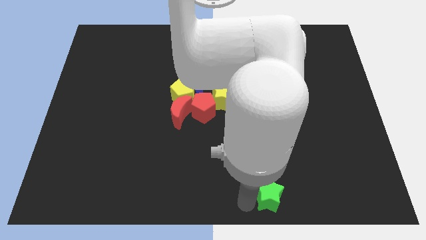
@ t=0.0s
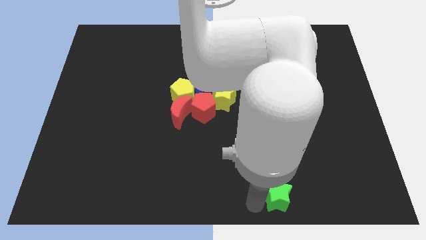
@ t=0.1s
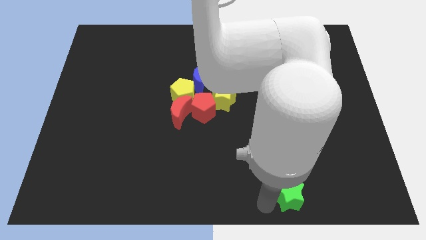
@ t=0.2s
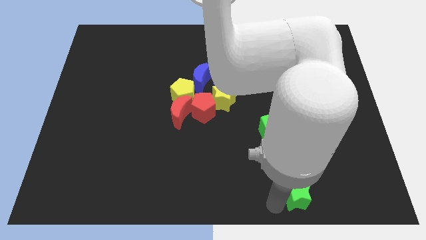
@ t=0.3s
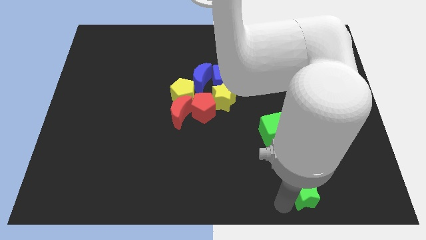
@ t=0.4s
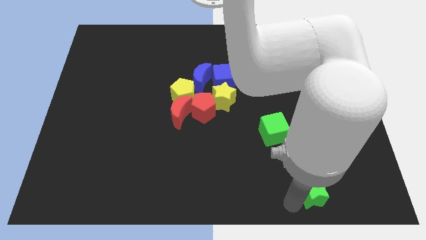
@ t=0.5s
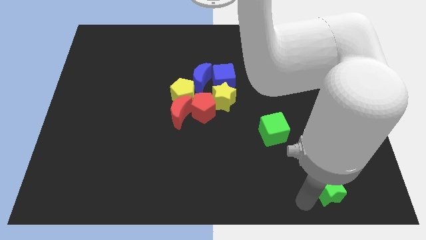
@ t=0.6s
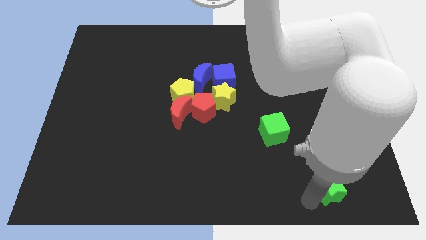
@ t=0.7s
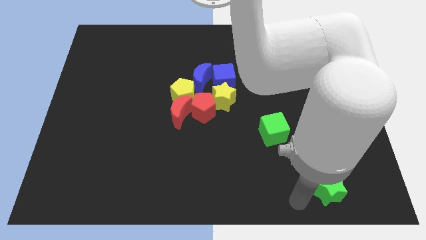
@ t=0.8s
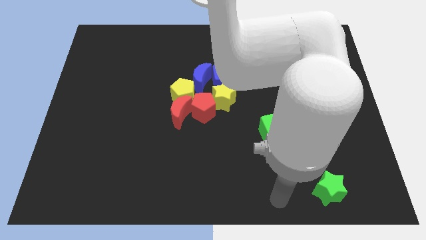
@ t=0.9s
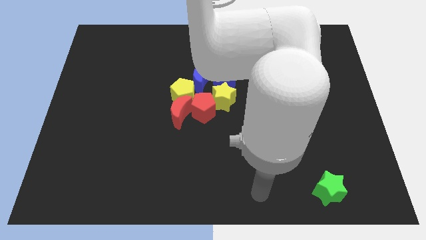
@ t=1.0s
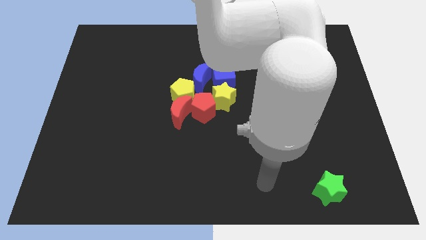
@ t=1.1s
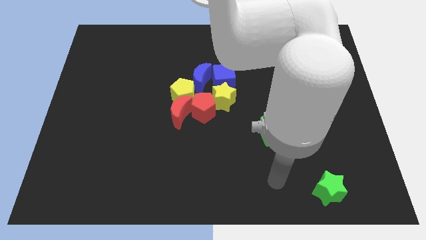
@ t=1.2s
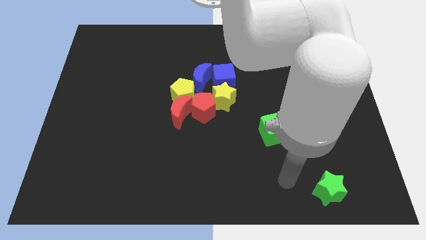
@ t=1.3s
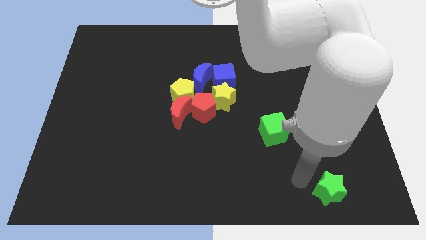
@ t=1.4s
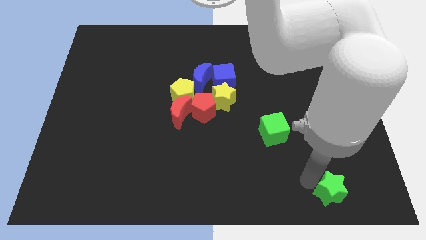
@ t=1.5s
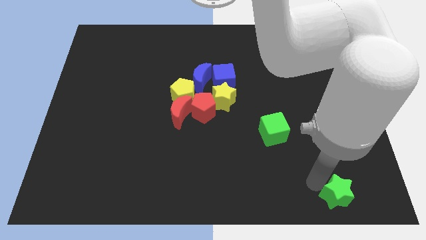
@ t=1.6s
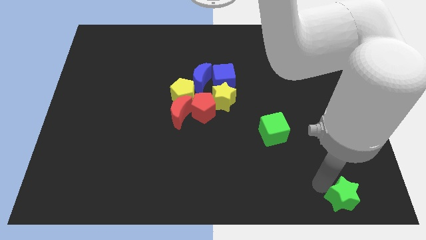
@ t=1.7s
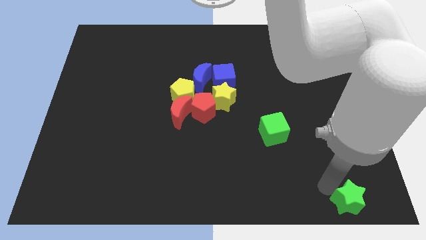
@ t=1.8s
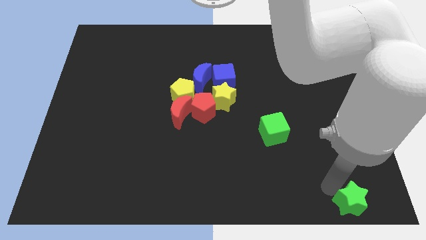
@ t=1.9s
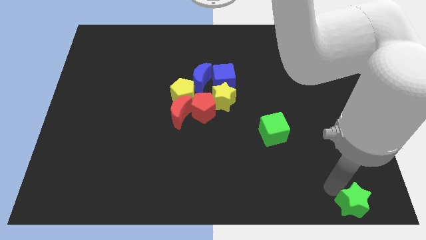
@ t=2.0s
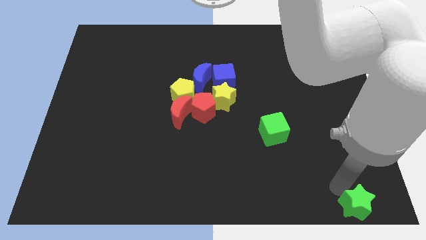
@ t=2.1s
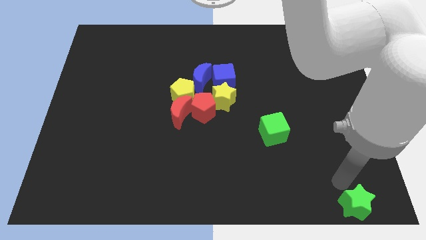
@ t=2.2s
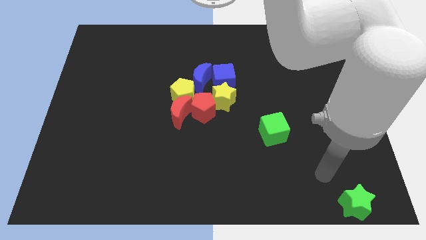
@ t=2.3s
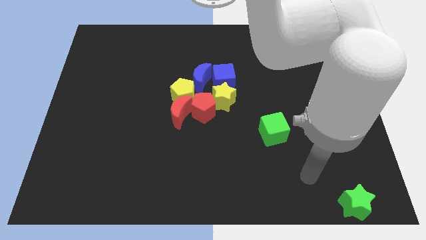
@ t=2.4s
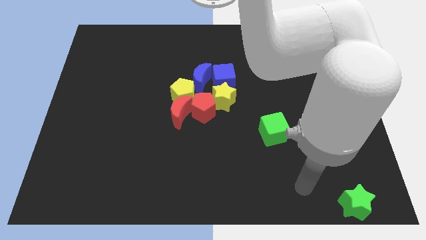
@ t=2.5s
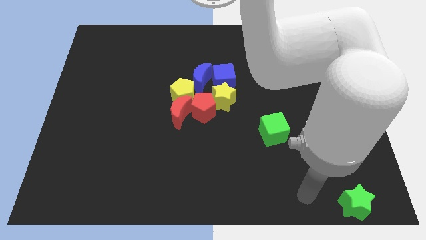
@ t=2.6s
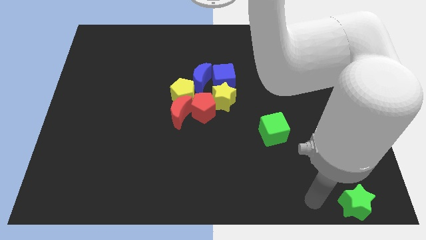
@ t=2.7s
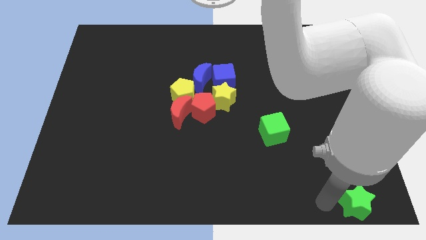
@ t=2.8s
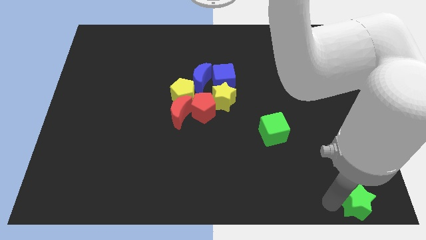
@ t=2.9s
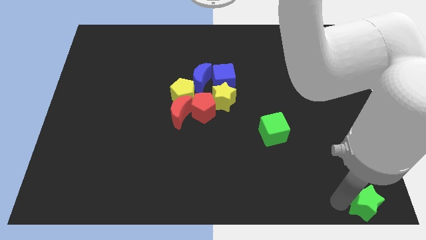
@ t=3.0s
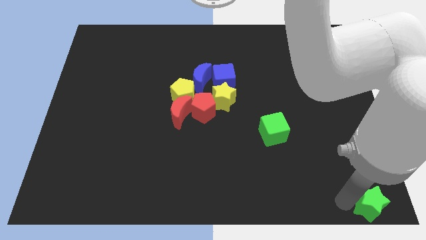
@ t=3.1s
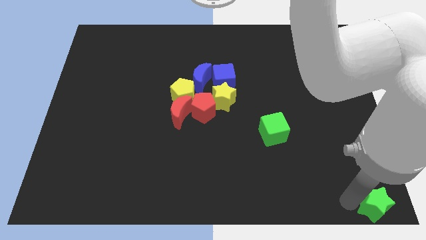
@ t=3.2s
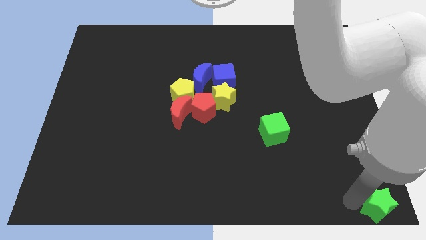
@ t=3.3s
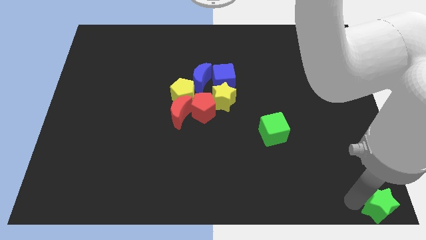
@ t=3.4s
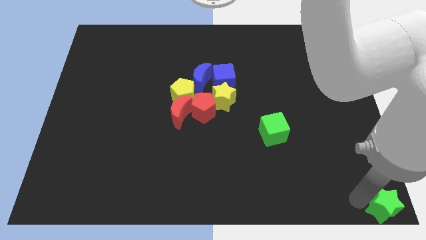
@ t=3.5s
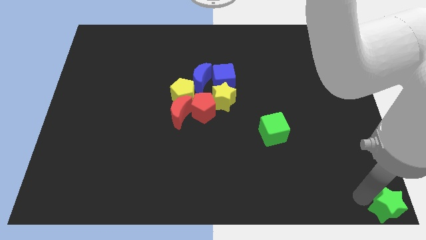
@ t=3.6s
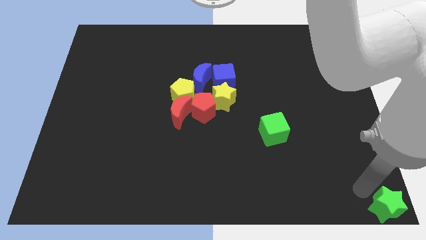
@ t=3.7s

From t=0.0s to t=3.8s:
push the green star to the bottom right corner

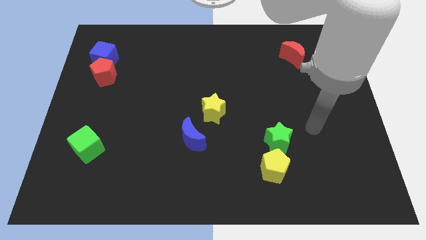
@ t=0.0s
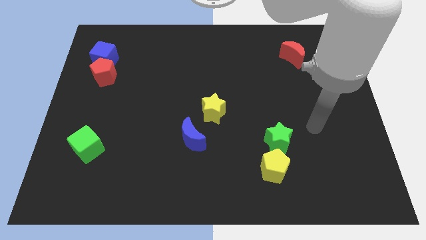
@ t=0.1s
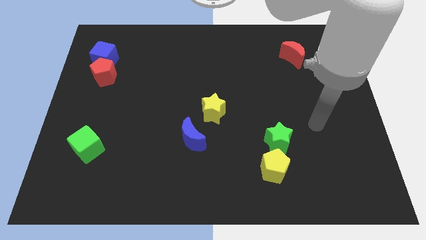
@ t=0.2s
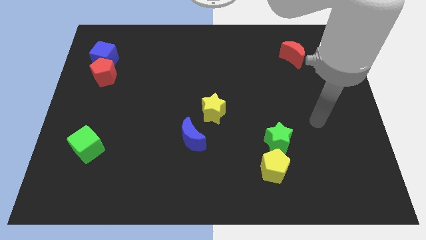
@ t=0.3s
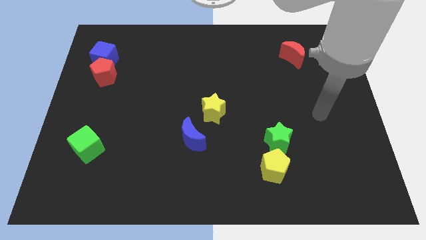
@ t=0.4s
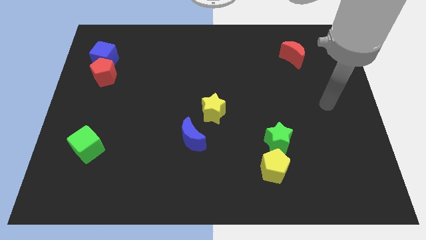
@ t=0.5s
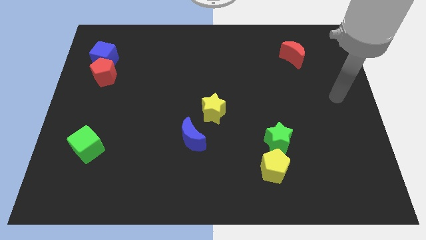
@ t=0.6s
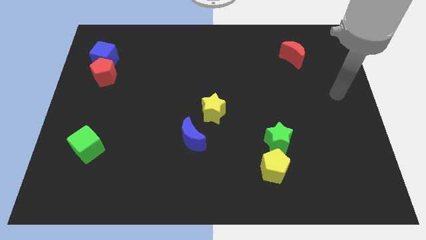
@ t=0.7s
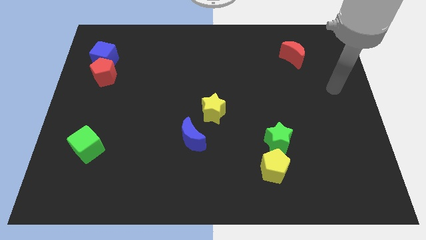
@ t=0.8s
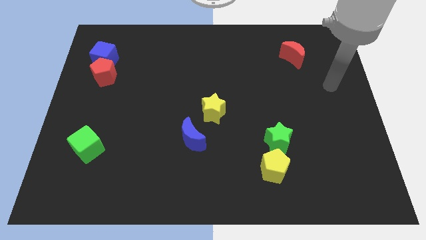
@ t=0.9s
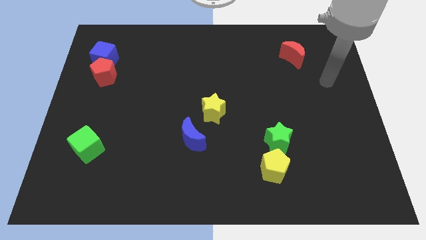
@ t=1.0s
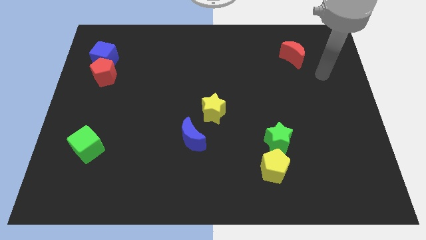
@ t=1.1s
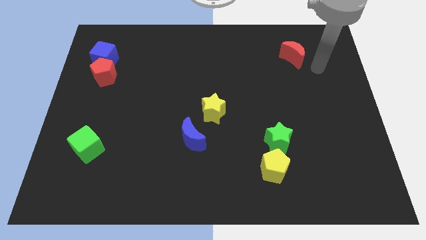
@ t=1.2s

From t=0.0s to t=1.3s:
move your arm towards the right side of the red moon

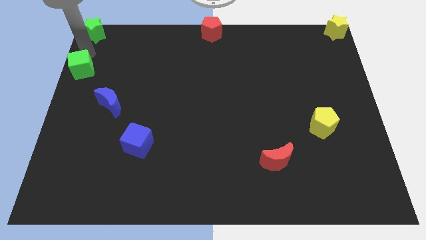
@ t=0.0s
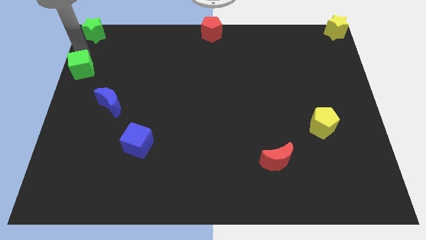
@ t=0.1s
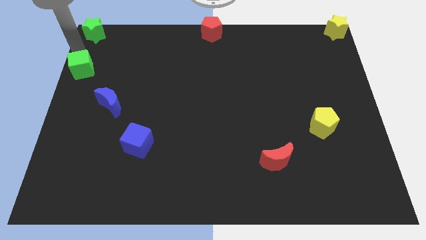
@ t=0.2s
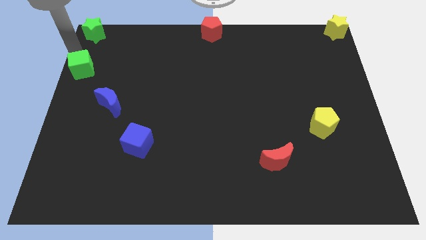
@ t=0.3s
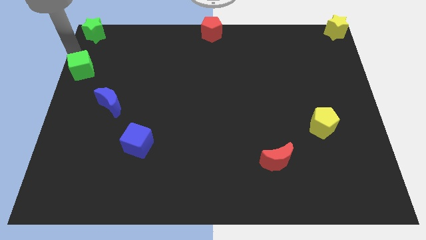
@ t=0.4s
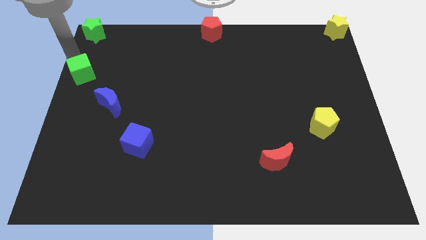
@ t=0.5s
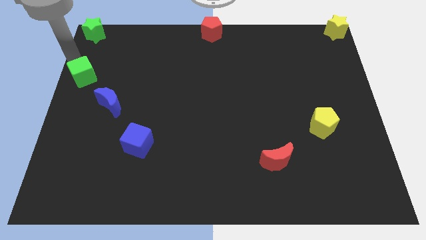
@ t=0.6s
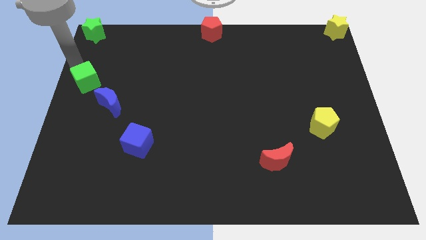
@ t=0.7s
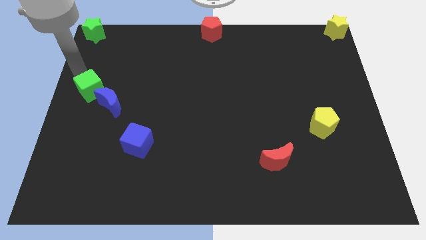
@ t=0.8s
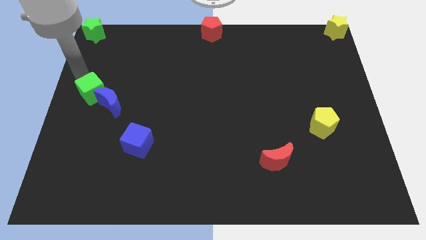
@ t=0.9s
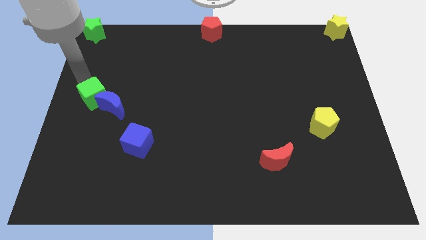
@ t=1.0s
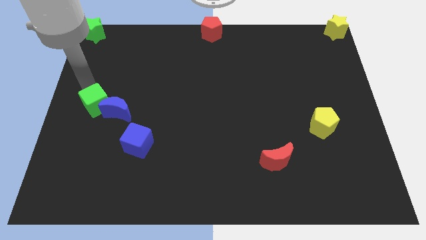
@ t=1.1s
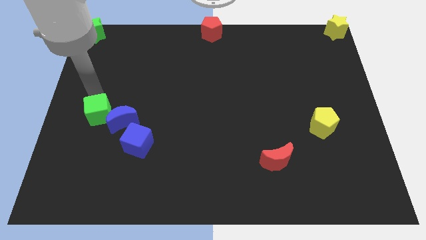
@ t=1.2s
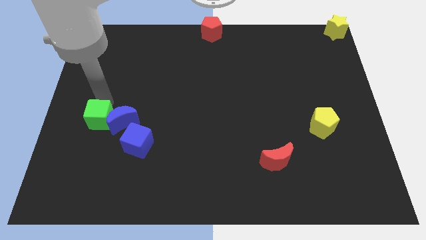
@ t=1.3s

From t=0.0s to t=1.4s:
push the green cube into the blue moon

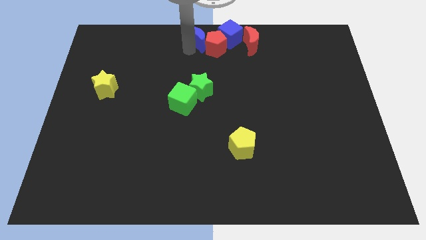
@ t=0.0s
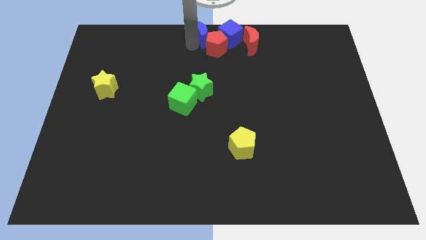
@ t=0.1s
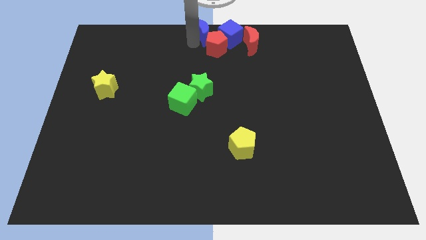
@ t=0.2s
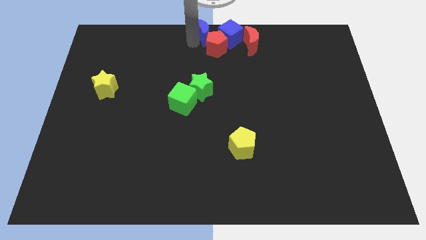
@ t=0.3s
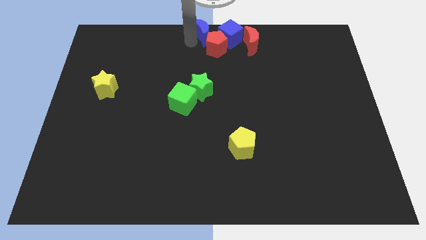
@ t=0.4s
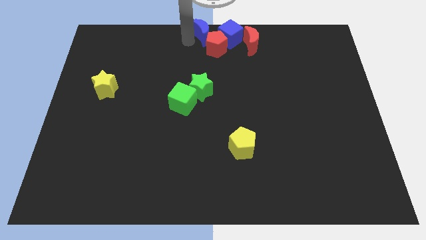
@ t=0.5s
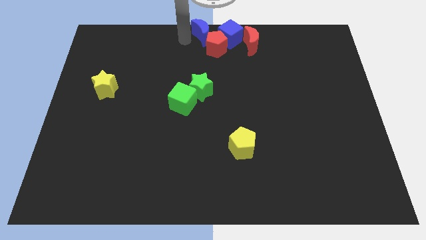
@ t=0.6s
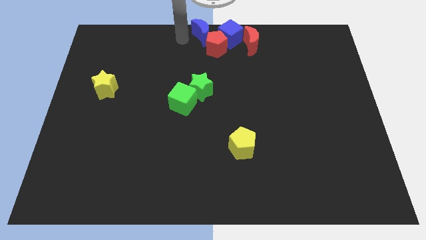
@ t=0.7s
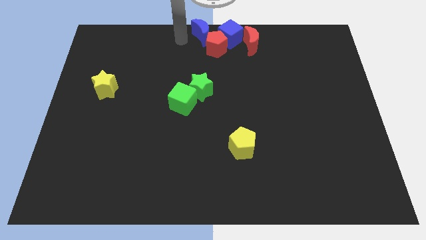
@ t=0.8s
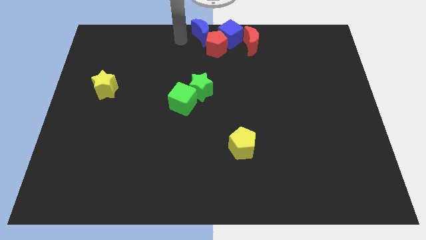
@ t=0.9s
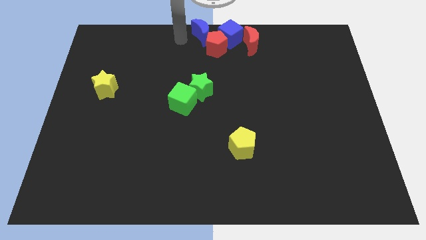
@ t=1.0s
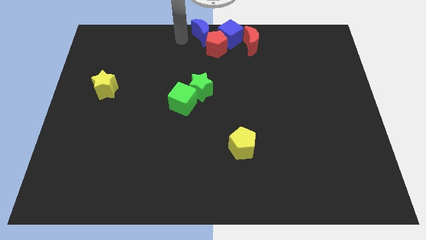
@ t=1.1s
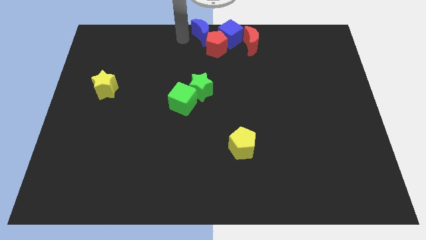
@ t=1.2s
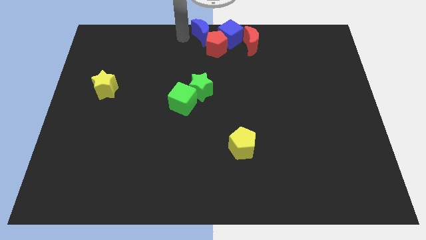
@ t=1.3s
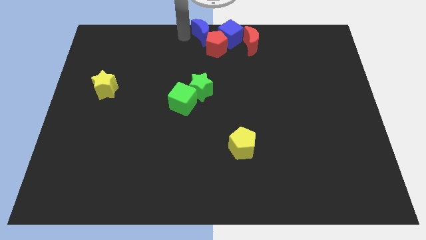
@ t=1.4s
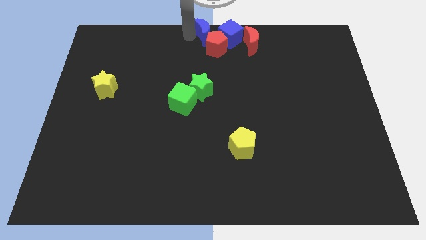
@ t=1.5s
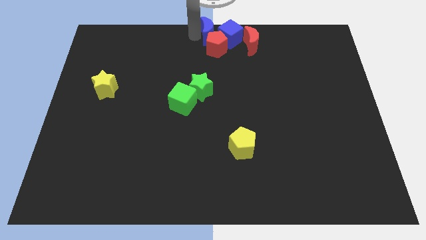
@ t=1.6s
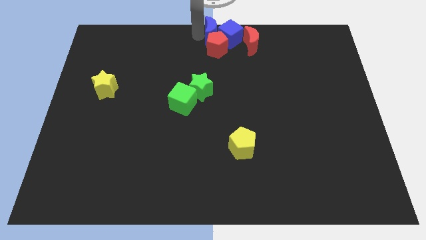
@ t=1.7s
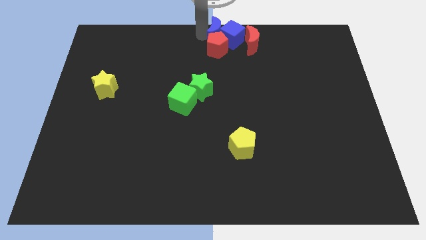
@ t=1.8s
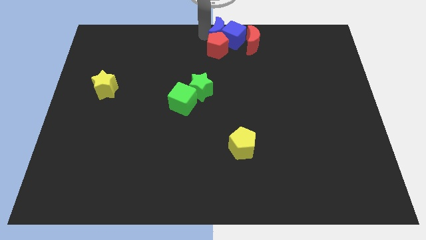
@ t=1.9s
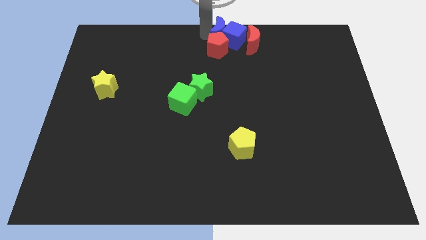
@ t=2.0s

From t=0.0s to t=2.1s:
move the blue crescent towards the blue cube

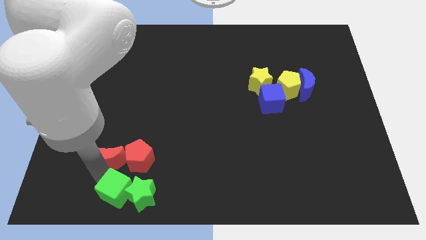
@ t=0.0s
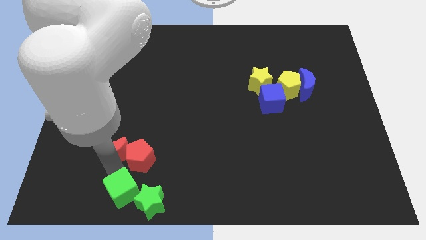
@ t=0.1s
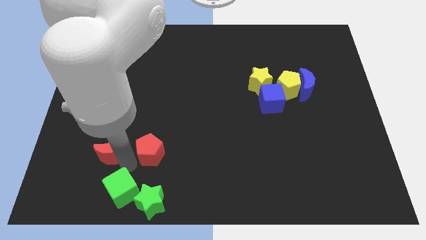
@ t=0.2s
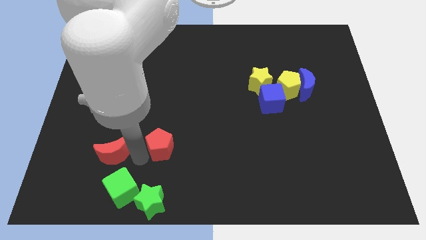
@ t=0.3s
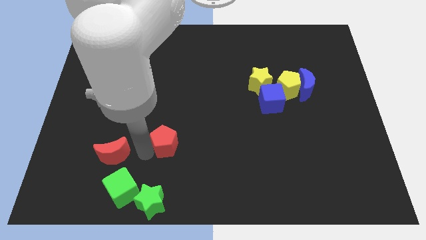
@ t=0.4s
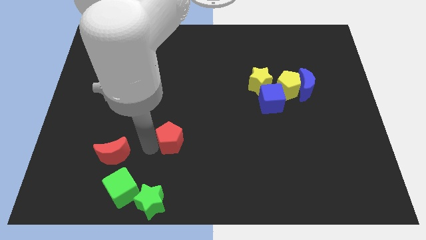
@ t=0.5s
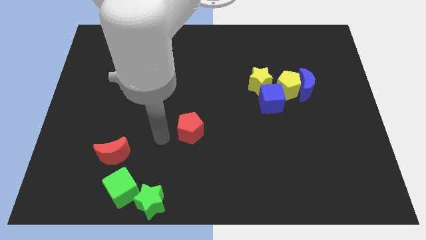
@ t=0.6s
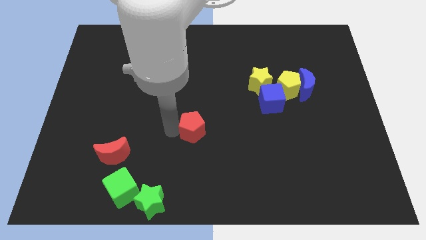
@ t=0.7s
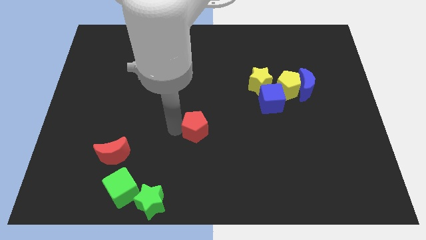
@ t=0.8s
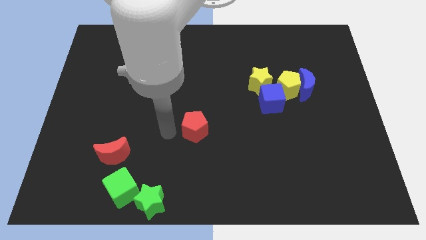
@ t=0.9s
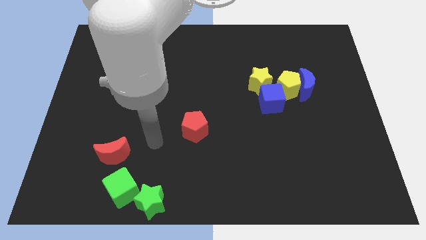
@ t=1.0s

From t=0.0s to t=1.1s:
push the red pentagon towards the center of the board
